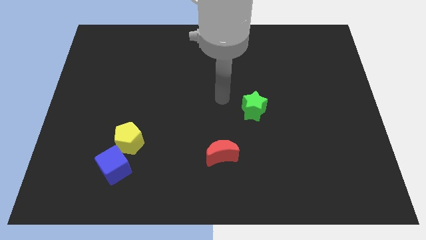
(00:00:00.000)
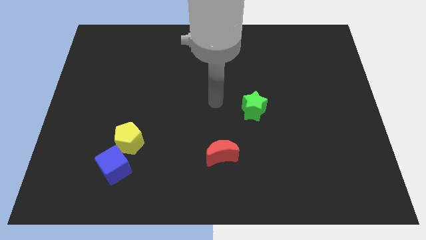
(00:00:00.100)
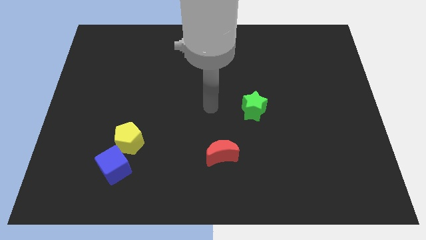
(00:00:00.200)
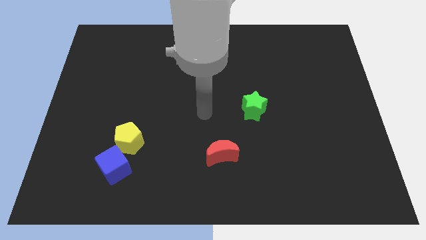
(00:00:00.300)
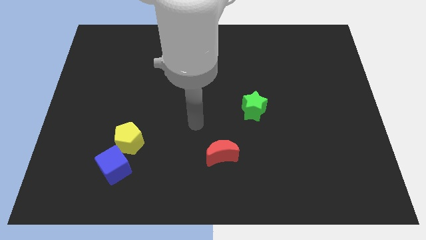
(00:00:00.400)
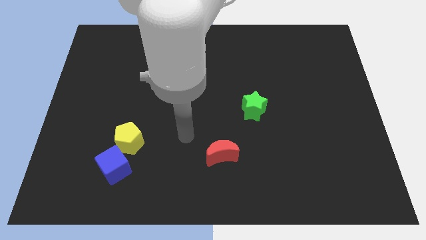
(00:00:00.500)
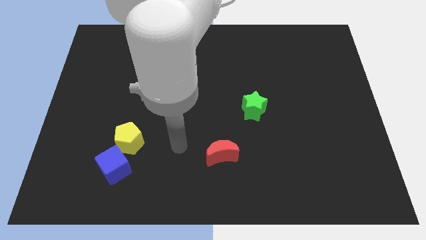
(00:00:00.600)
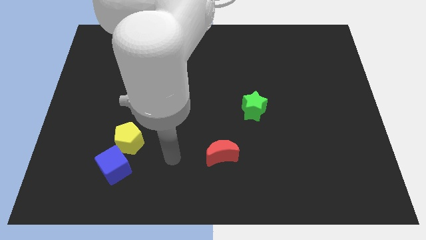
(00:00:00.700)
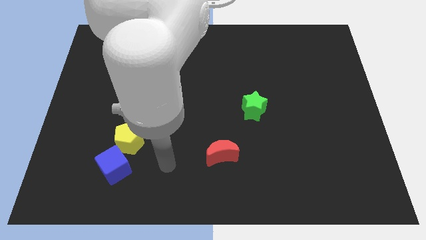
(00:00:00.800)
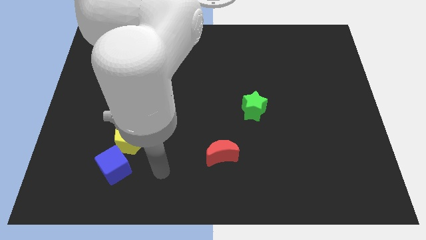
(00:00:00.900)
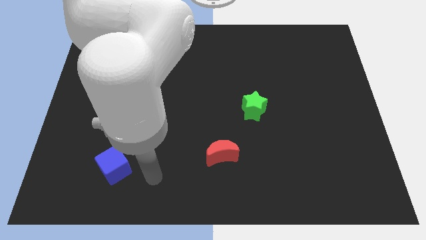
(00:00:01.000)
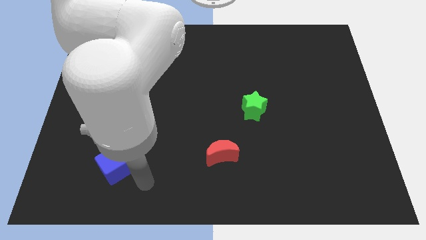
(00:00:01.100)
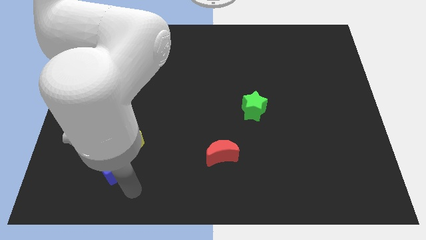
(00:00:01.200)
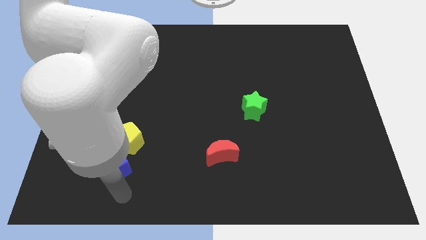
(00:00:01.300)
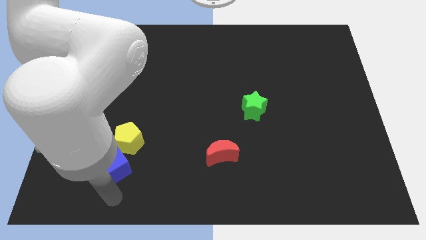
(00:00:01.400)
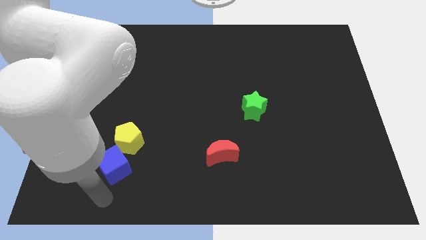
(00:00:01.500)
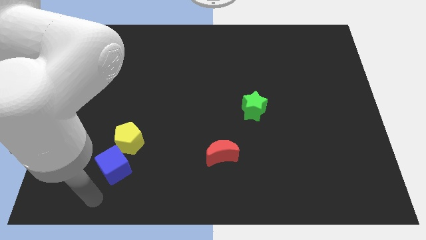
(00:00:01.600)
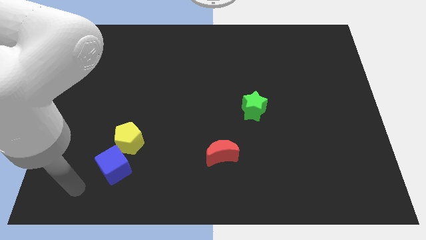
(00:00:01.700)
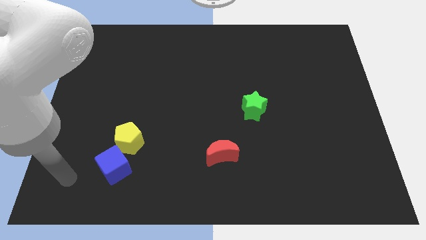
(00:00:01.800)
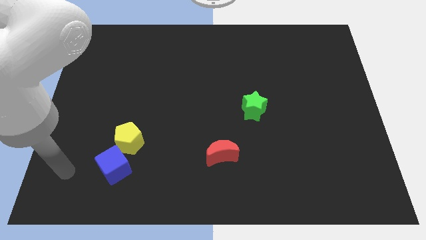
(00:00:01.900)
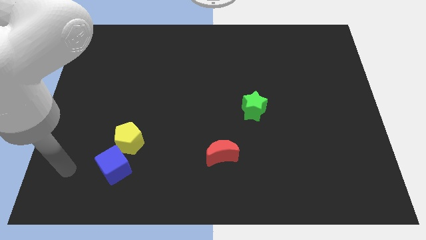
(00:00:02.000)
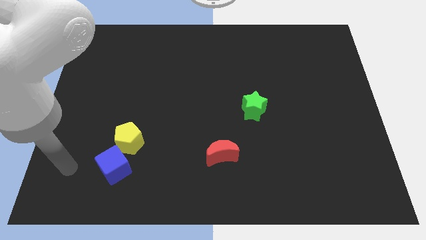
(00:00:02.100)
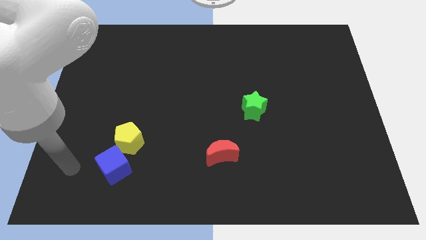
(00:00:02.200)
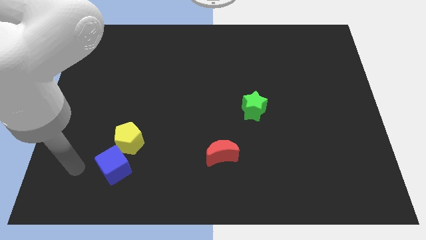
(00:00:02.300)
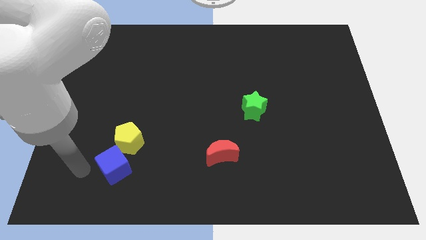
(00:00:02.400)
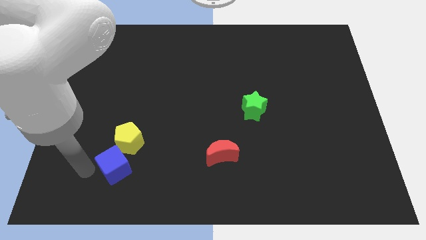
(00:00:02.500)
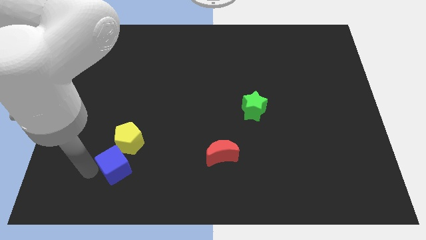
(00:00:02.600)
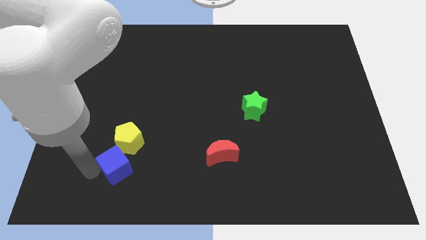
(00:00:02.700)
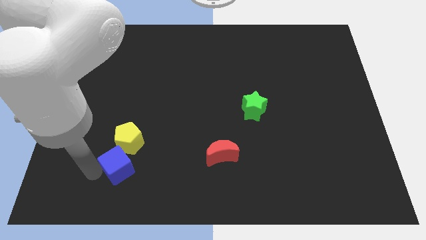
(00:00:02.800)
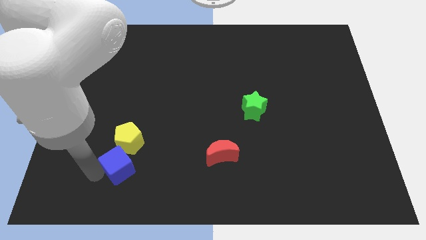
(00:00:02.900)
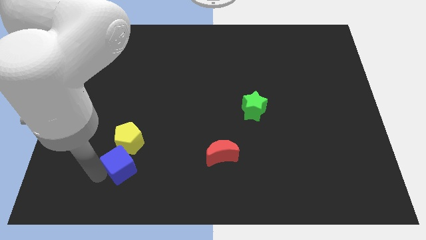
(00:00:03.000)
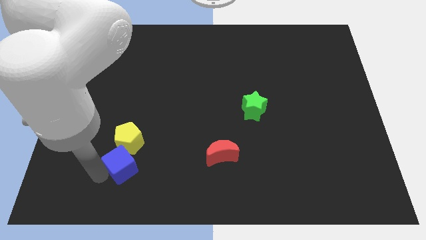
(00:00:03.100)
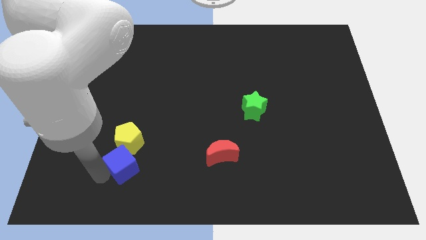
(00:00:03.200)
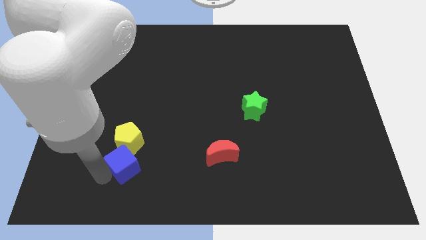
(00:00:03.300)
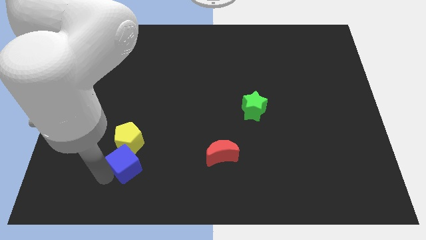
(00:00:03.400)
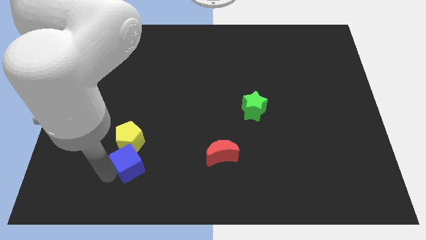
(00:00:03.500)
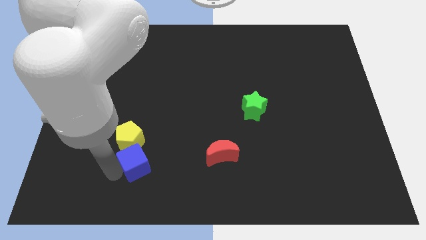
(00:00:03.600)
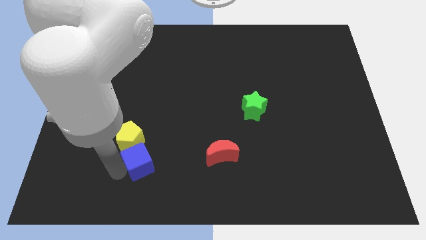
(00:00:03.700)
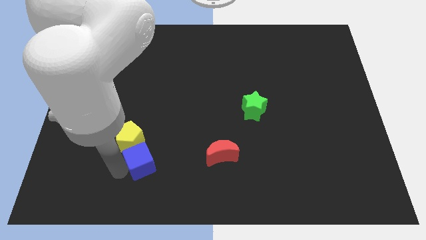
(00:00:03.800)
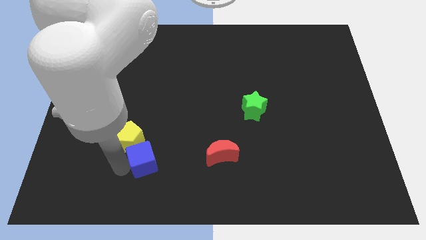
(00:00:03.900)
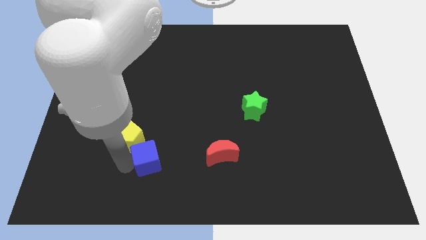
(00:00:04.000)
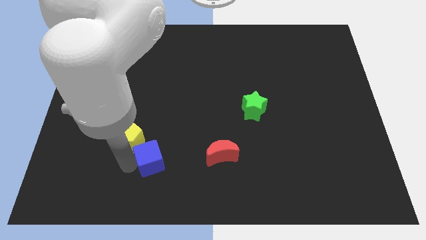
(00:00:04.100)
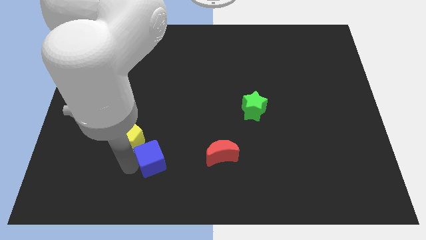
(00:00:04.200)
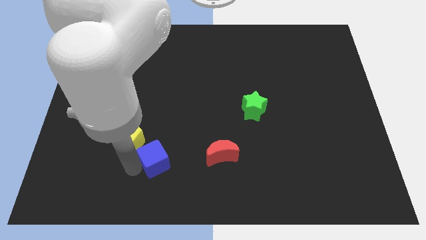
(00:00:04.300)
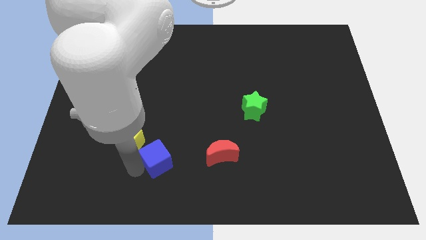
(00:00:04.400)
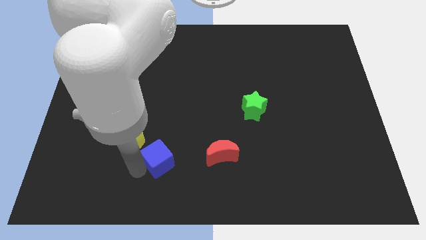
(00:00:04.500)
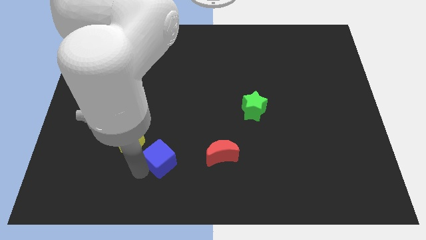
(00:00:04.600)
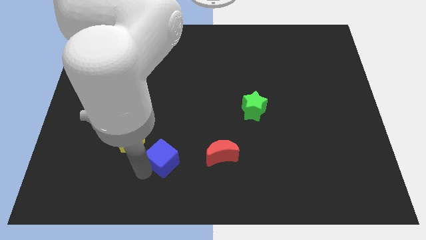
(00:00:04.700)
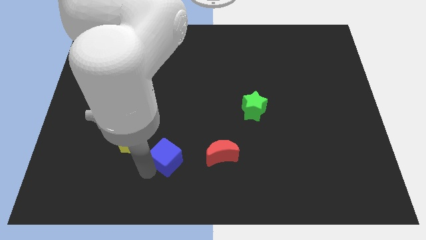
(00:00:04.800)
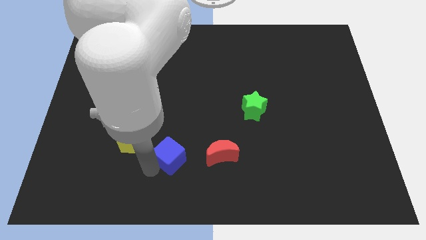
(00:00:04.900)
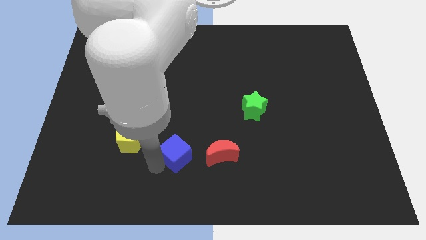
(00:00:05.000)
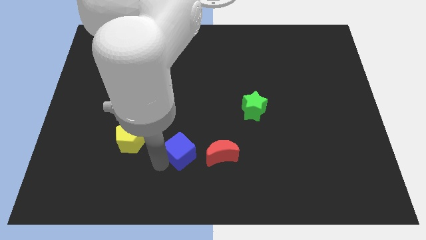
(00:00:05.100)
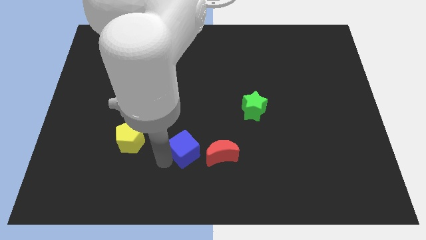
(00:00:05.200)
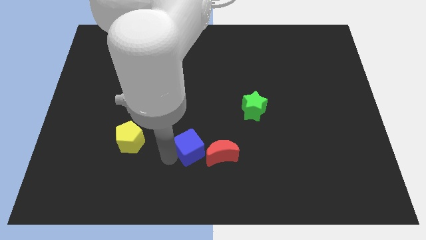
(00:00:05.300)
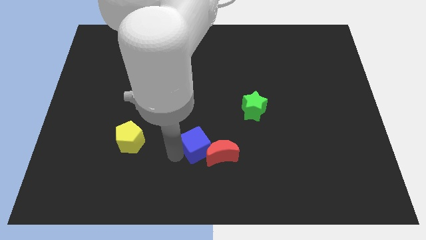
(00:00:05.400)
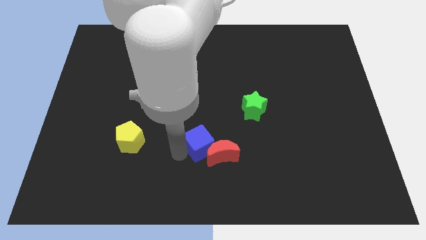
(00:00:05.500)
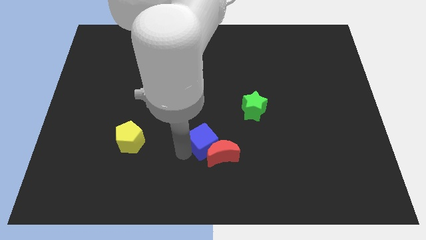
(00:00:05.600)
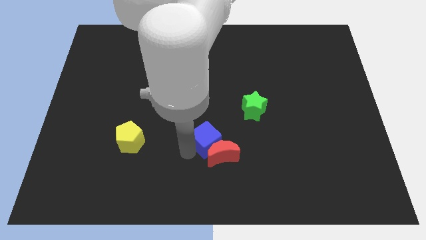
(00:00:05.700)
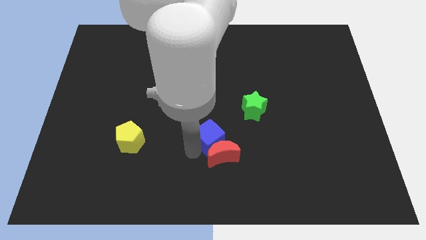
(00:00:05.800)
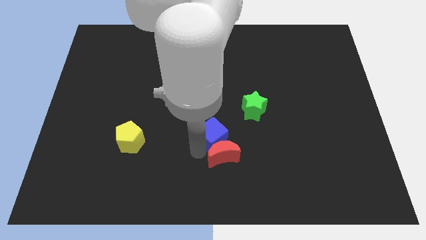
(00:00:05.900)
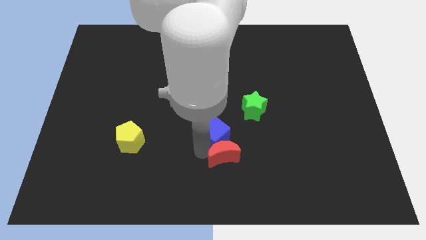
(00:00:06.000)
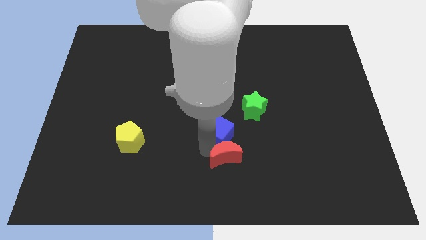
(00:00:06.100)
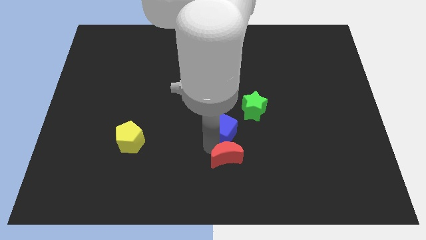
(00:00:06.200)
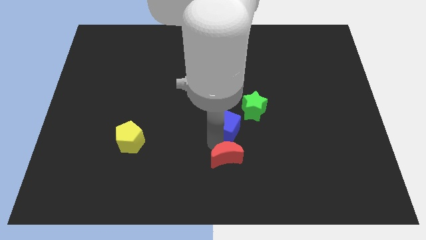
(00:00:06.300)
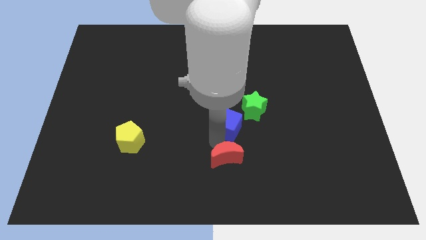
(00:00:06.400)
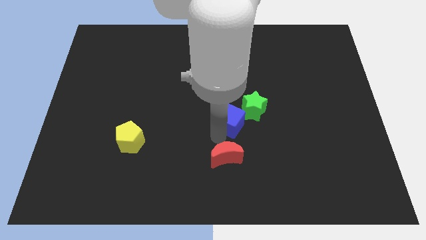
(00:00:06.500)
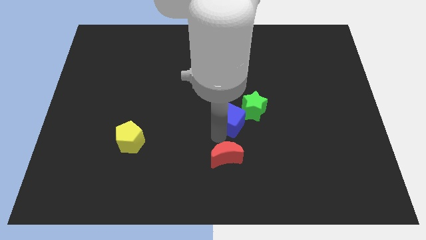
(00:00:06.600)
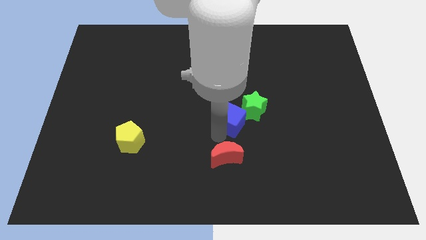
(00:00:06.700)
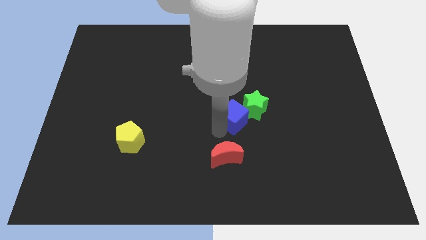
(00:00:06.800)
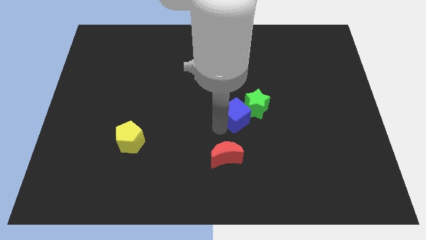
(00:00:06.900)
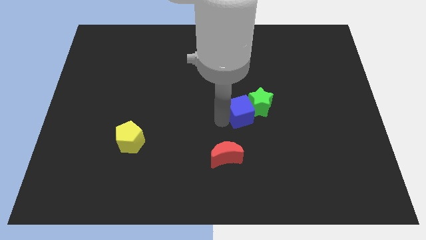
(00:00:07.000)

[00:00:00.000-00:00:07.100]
push the blue block next to the star

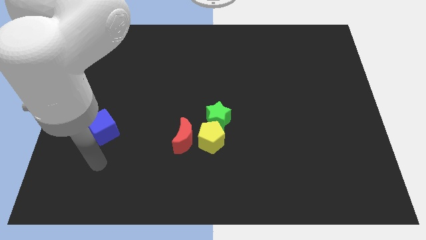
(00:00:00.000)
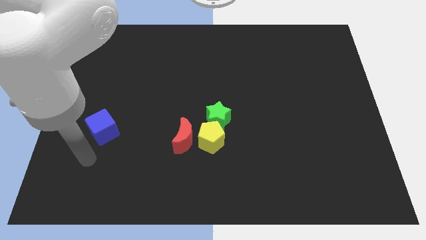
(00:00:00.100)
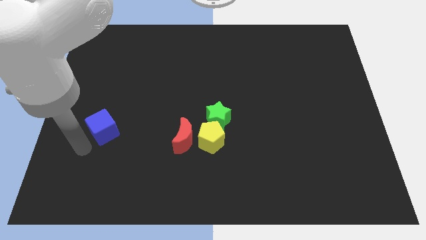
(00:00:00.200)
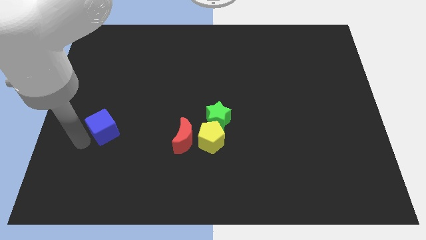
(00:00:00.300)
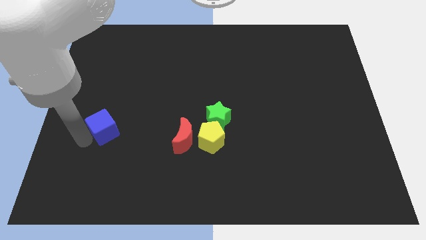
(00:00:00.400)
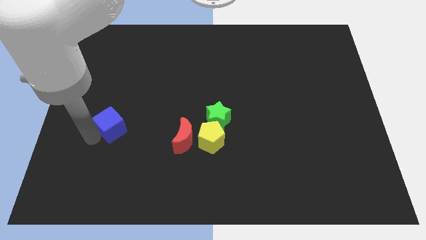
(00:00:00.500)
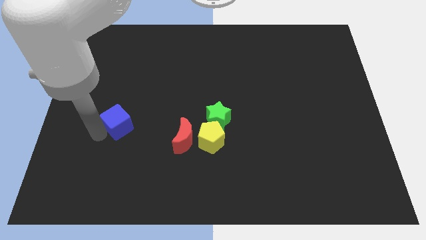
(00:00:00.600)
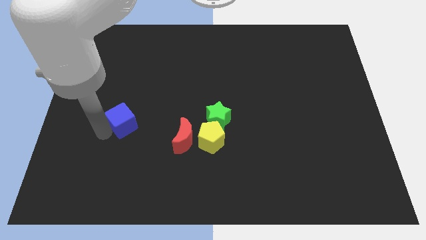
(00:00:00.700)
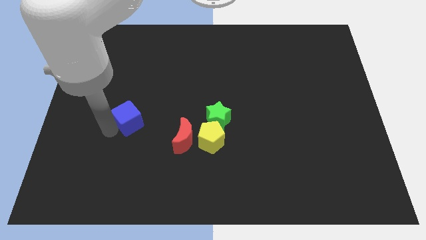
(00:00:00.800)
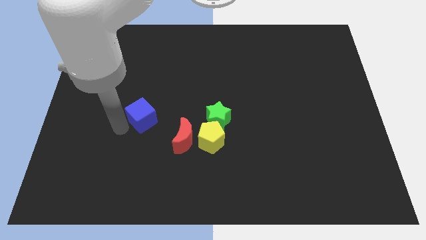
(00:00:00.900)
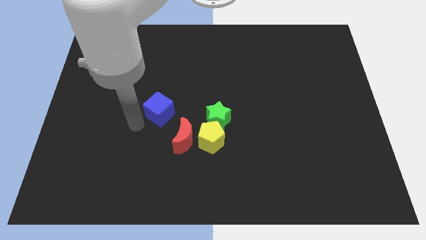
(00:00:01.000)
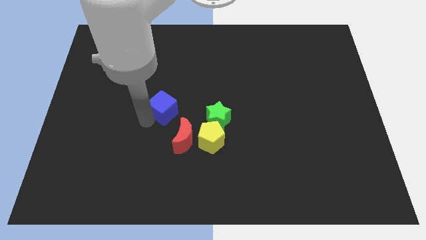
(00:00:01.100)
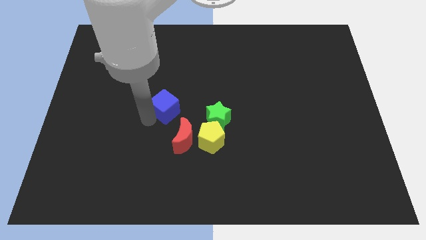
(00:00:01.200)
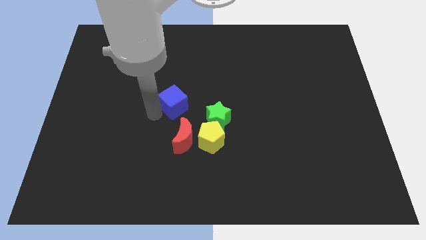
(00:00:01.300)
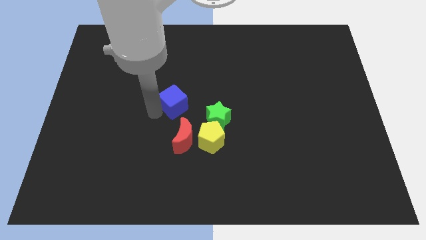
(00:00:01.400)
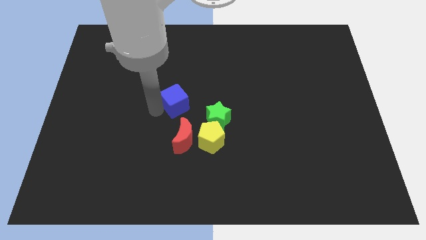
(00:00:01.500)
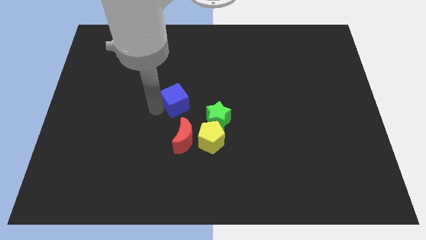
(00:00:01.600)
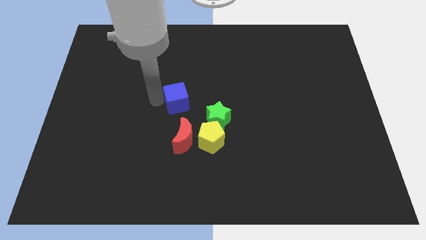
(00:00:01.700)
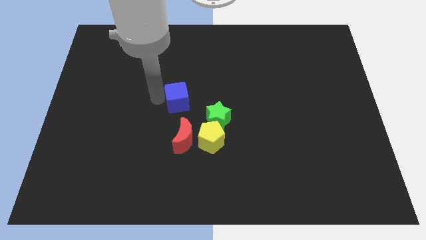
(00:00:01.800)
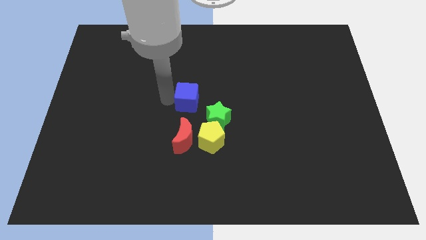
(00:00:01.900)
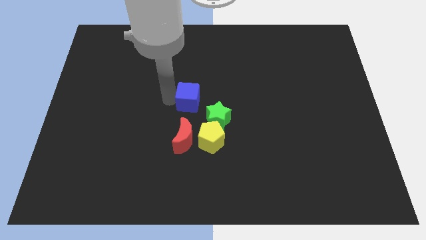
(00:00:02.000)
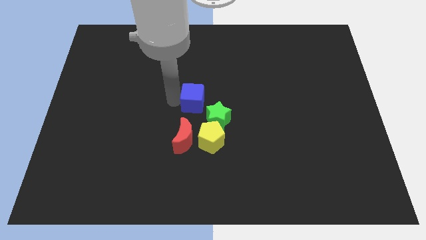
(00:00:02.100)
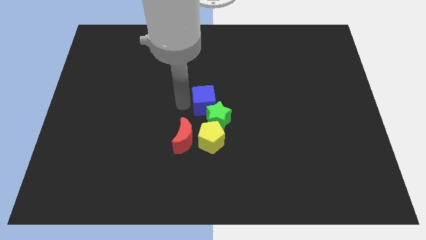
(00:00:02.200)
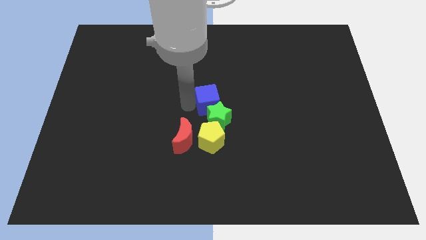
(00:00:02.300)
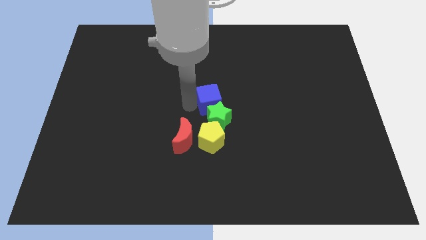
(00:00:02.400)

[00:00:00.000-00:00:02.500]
move the blue block close to the green block
